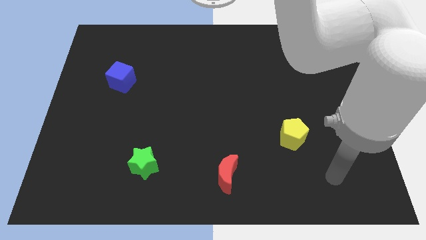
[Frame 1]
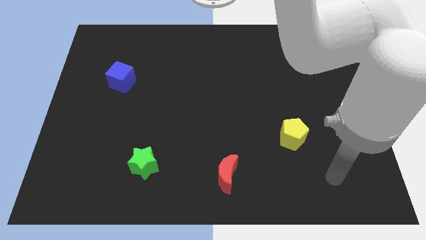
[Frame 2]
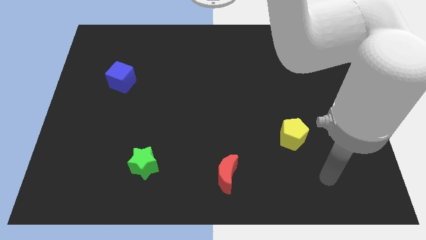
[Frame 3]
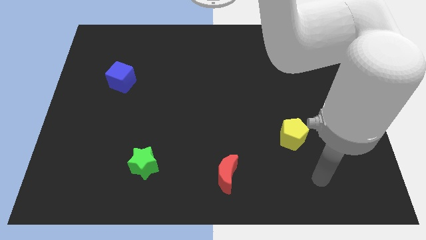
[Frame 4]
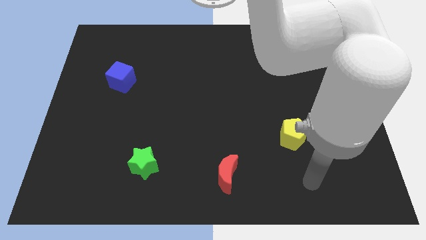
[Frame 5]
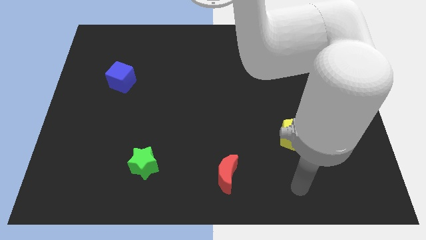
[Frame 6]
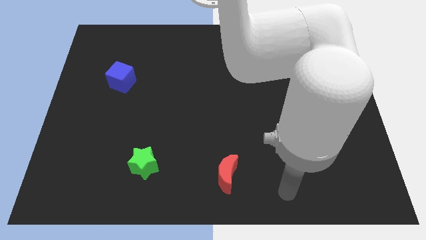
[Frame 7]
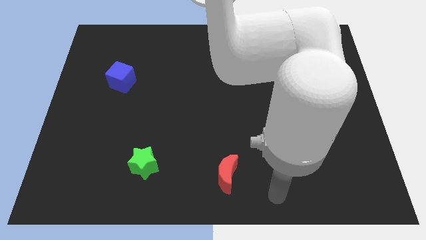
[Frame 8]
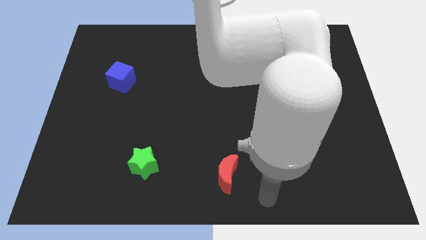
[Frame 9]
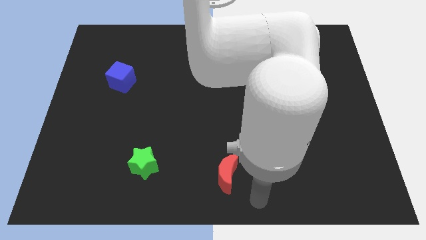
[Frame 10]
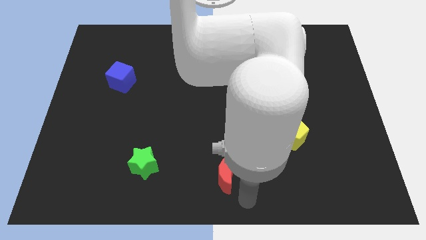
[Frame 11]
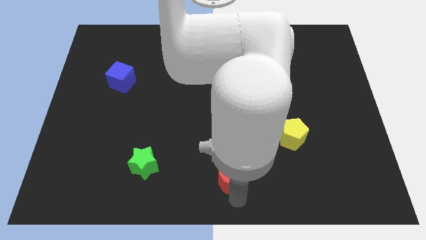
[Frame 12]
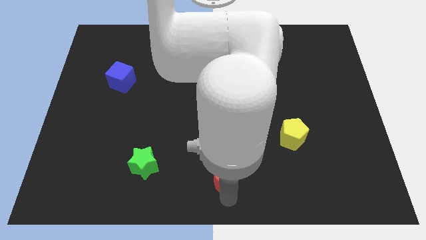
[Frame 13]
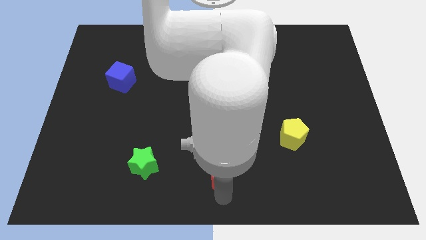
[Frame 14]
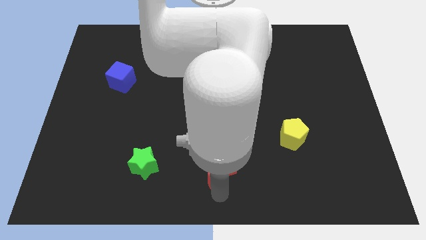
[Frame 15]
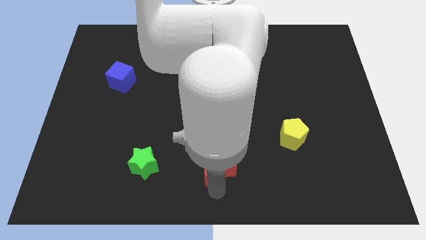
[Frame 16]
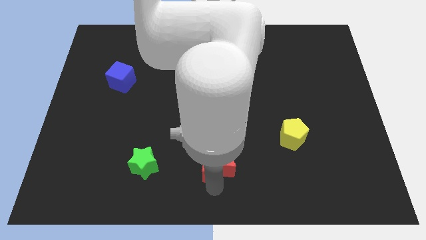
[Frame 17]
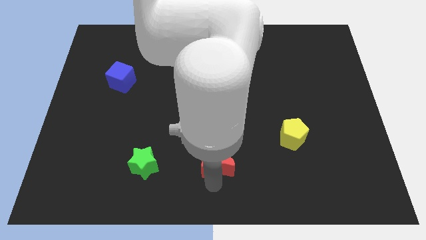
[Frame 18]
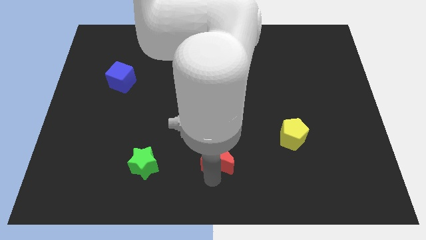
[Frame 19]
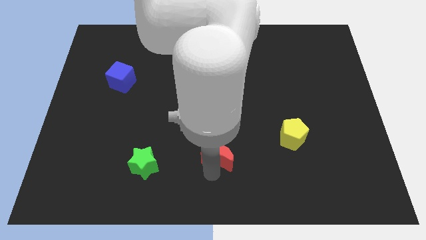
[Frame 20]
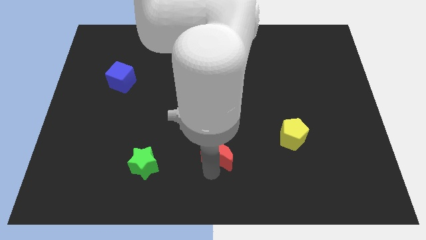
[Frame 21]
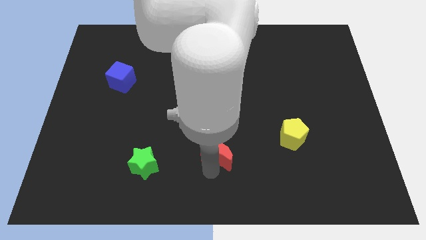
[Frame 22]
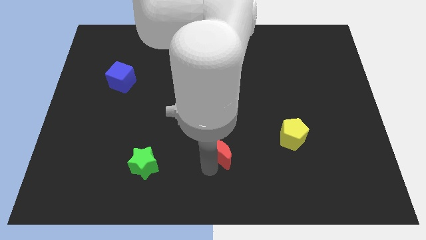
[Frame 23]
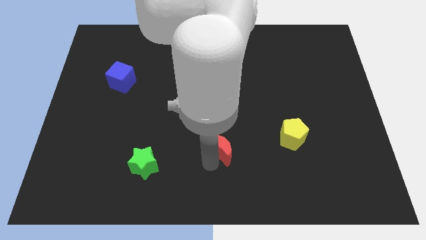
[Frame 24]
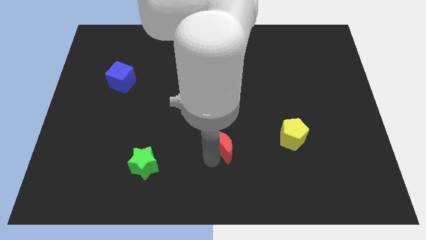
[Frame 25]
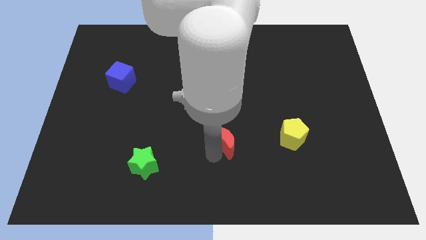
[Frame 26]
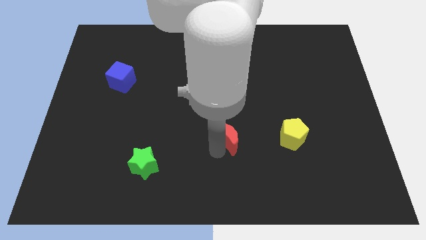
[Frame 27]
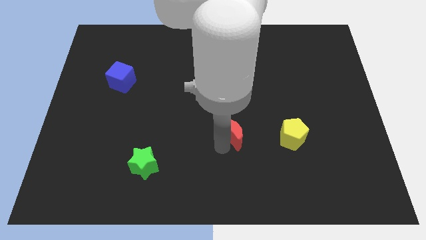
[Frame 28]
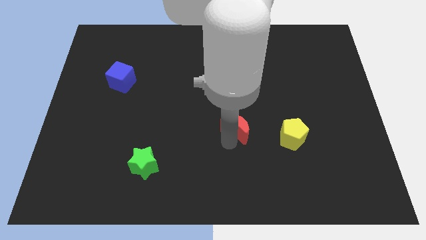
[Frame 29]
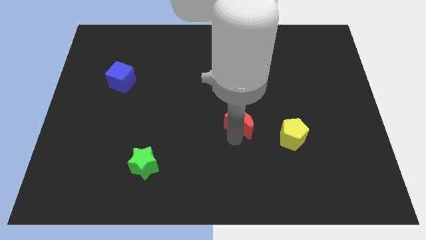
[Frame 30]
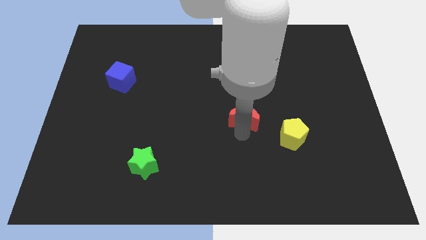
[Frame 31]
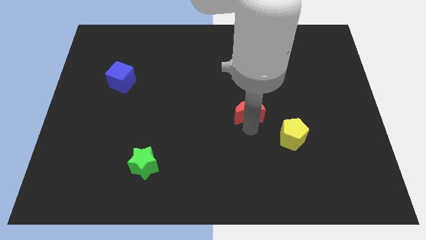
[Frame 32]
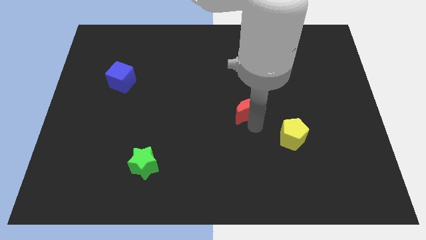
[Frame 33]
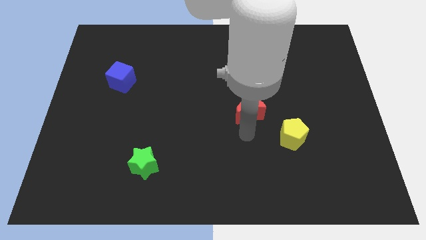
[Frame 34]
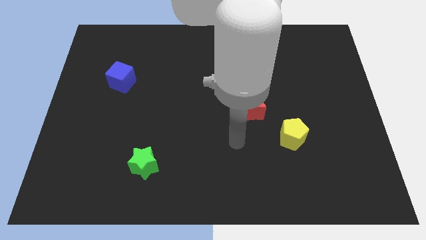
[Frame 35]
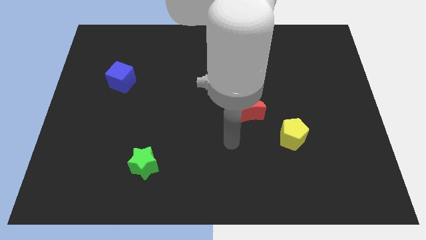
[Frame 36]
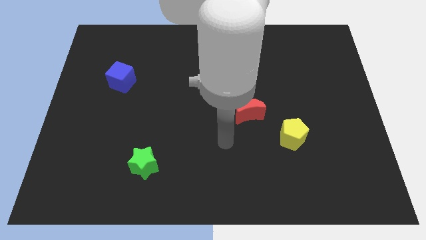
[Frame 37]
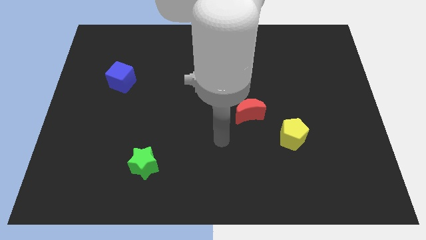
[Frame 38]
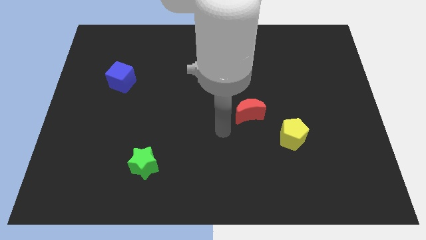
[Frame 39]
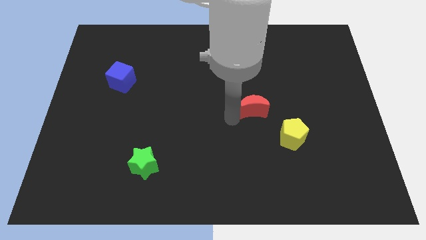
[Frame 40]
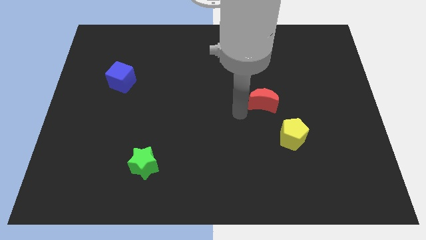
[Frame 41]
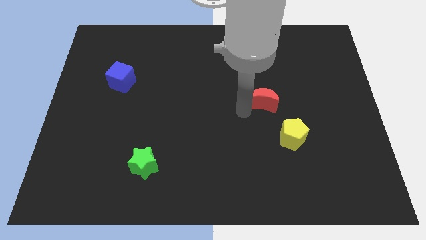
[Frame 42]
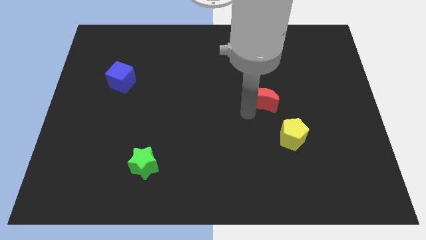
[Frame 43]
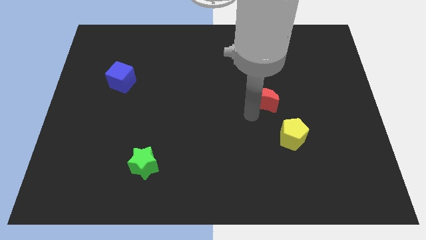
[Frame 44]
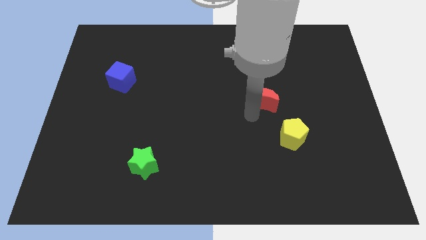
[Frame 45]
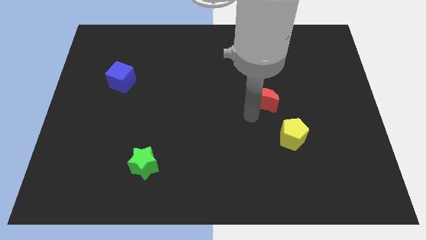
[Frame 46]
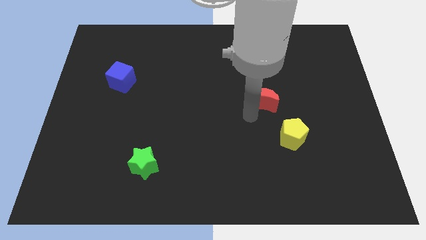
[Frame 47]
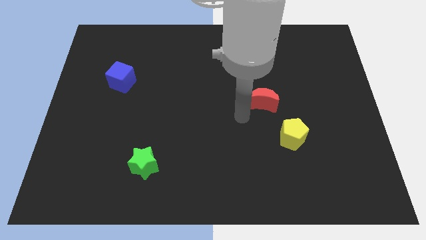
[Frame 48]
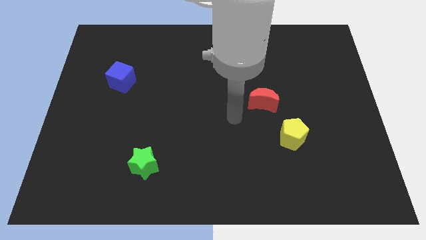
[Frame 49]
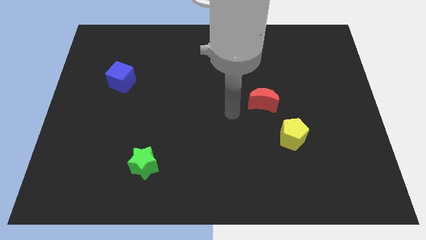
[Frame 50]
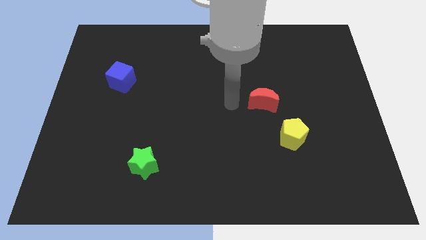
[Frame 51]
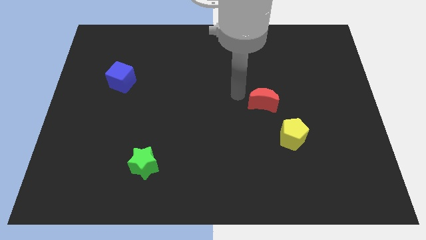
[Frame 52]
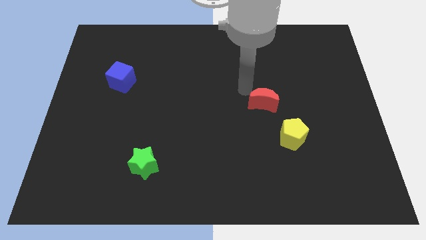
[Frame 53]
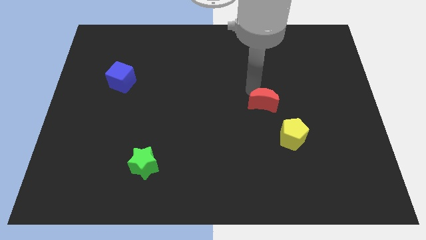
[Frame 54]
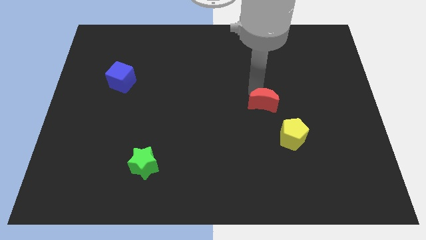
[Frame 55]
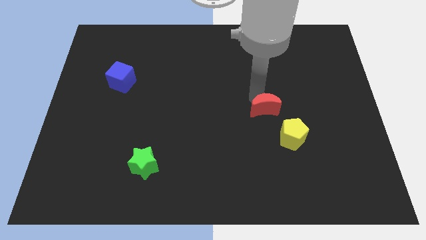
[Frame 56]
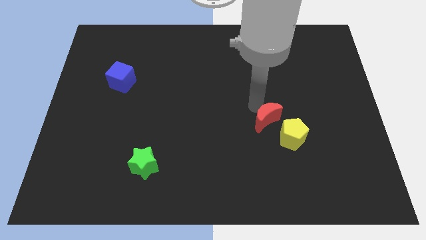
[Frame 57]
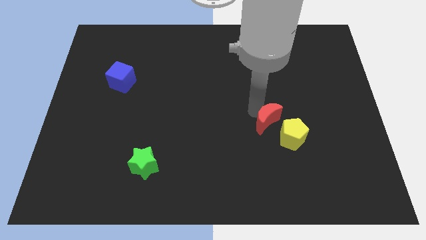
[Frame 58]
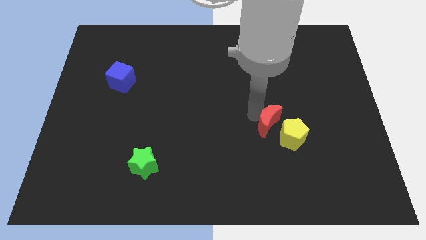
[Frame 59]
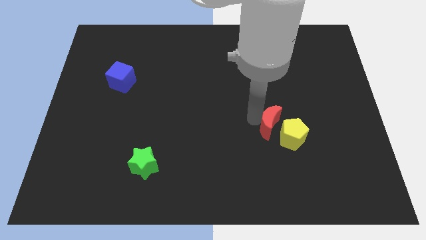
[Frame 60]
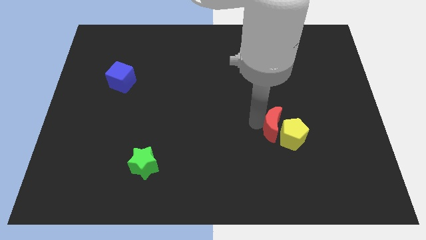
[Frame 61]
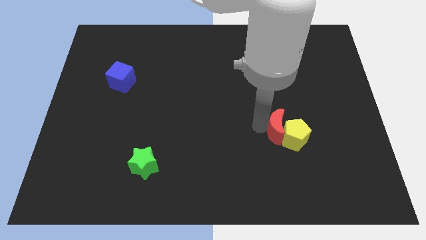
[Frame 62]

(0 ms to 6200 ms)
push the moon to the pentagon

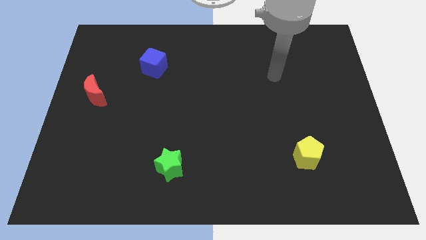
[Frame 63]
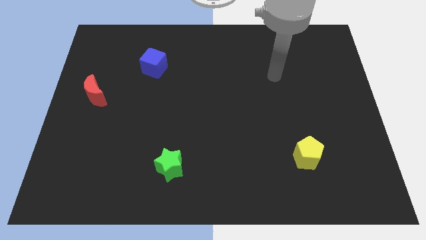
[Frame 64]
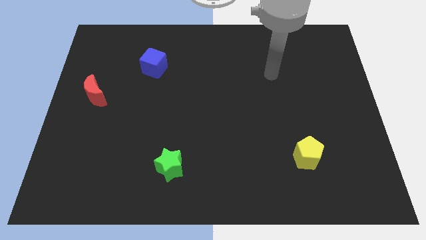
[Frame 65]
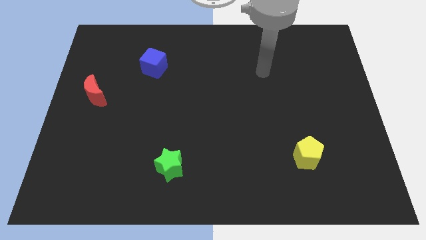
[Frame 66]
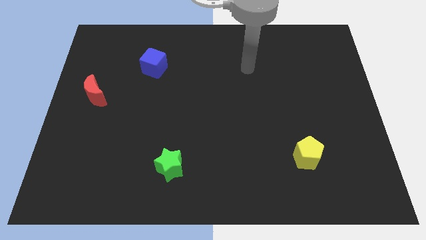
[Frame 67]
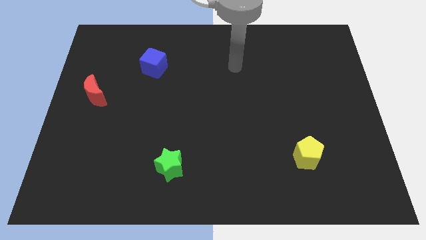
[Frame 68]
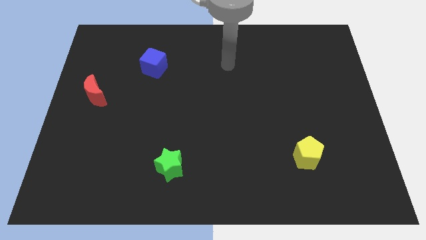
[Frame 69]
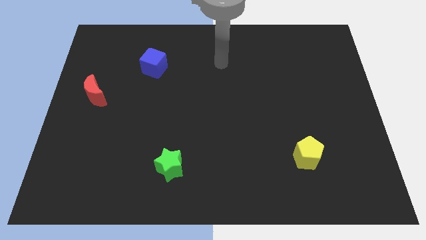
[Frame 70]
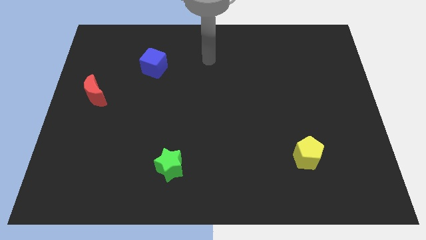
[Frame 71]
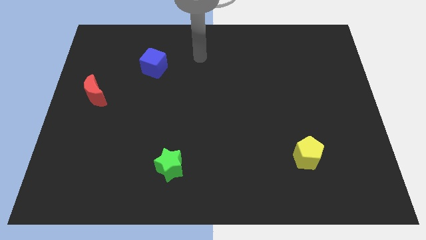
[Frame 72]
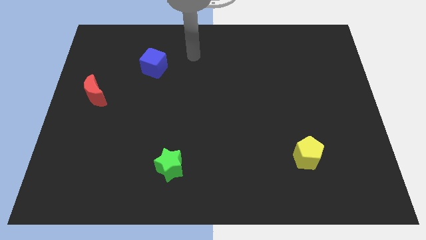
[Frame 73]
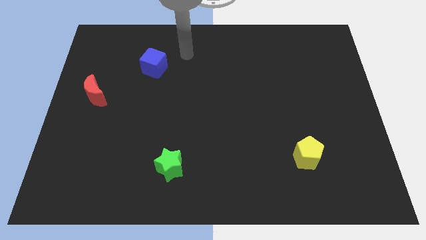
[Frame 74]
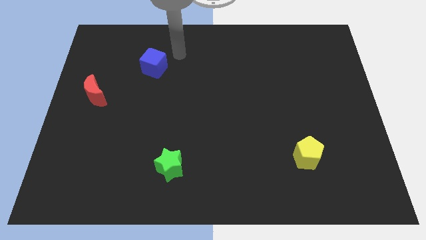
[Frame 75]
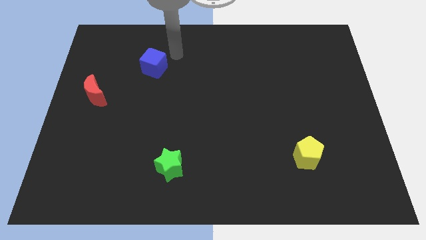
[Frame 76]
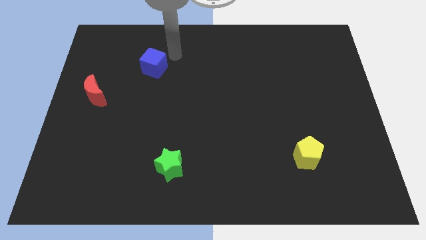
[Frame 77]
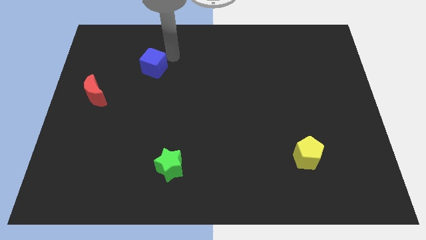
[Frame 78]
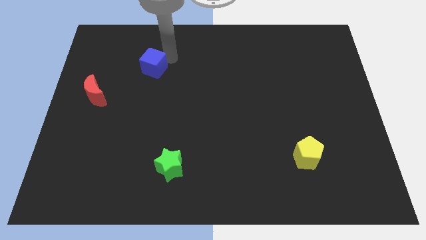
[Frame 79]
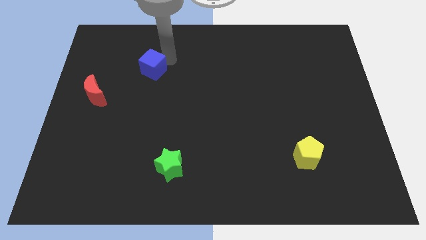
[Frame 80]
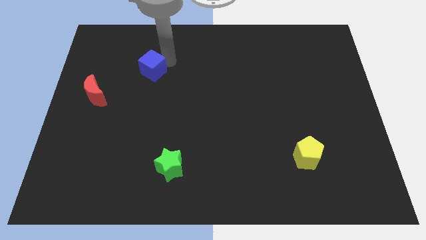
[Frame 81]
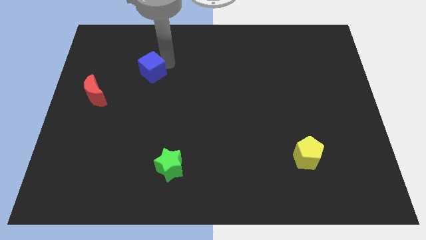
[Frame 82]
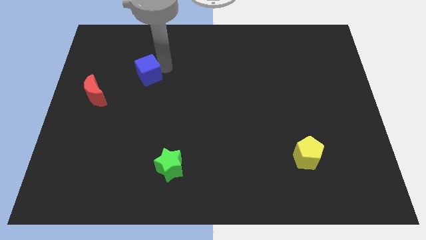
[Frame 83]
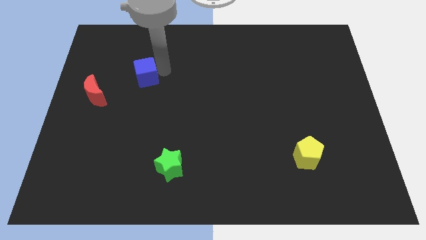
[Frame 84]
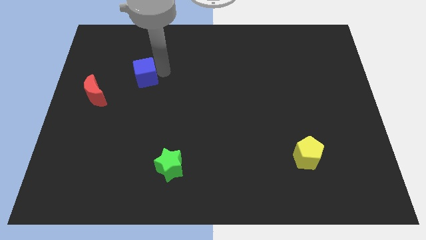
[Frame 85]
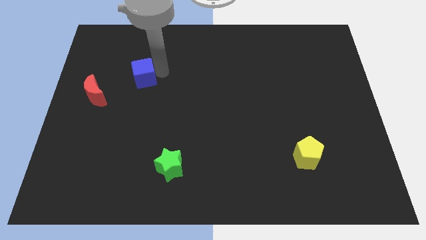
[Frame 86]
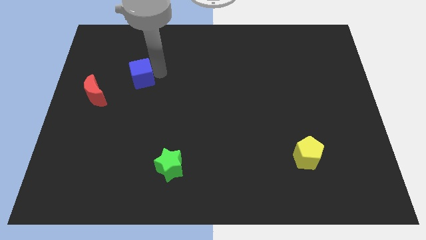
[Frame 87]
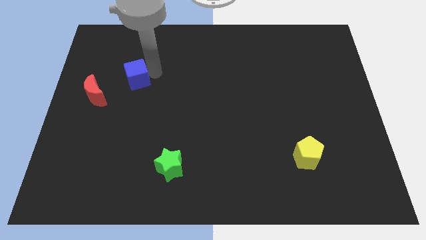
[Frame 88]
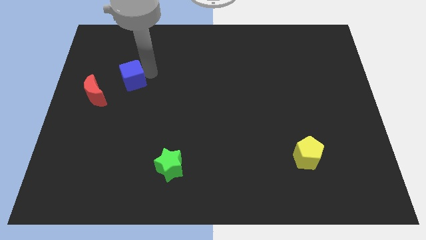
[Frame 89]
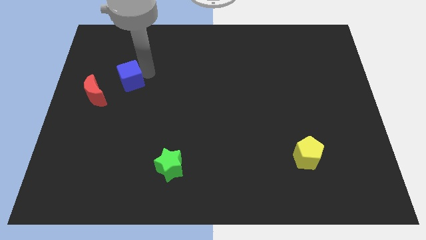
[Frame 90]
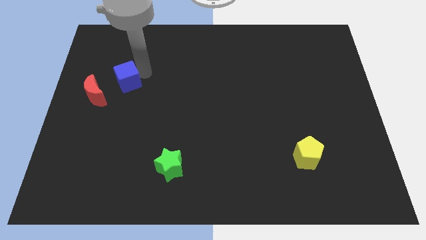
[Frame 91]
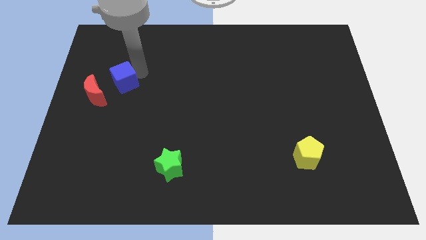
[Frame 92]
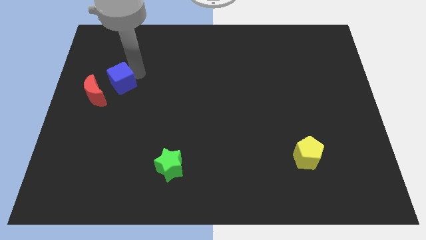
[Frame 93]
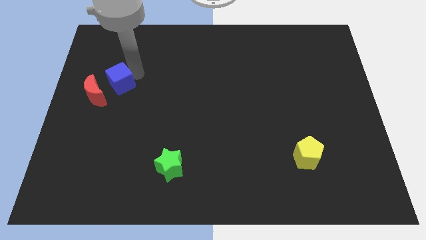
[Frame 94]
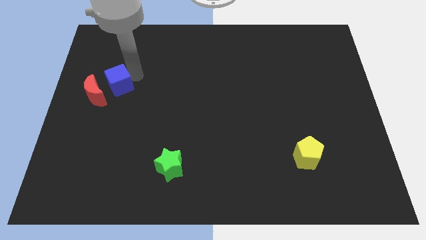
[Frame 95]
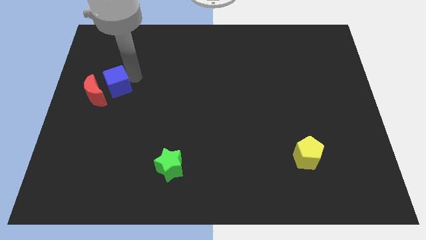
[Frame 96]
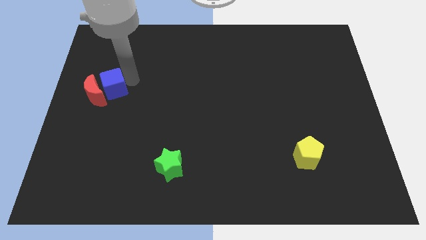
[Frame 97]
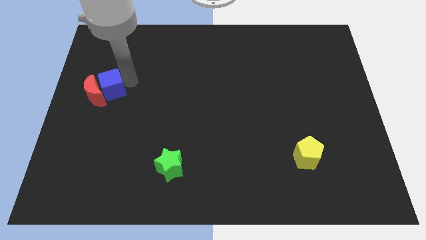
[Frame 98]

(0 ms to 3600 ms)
slide the blue block next to the red block
